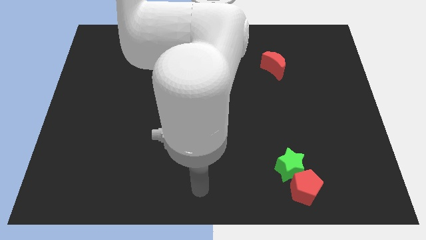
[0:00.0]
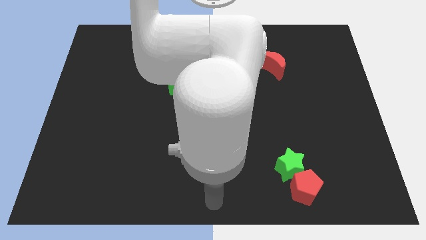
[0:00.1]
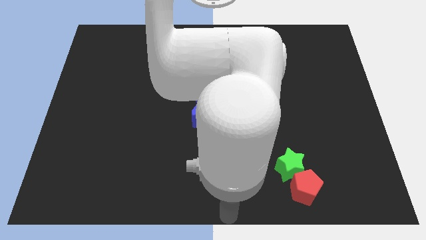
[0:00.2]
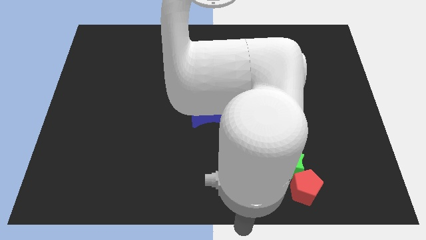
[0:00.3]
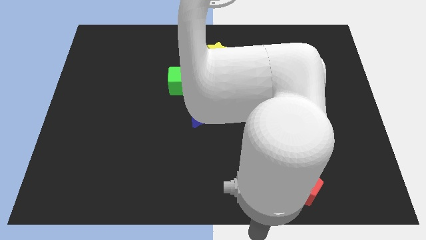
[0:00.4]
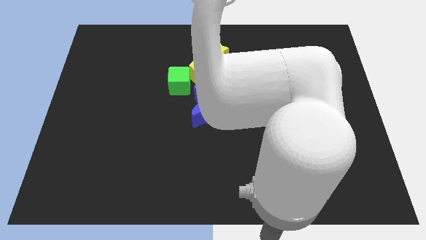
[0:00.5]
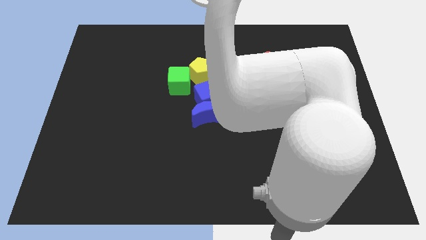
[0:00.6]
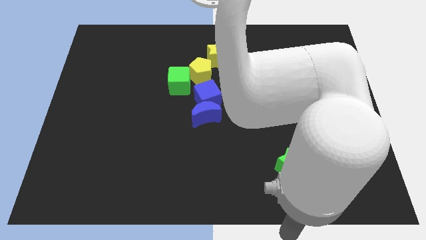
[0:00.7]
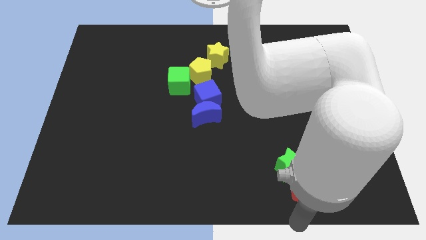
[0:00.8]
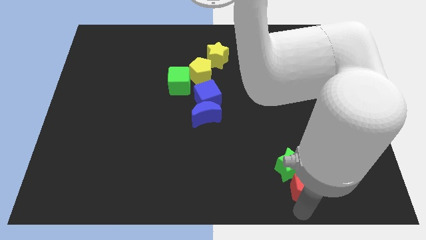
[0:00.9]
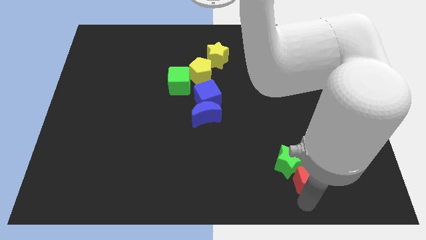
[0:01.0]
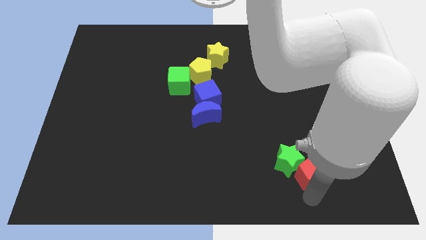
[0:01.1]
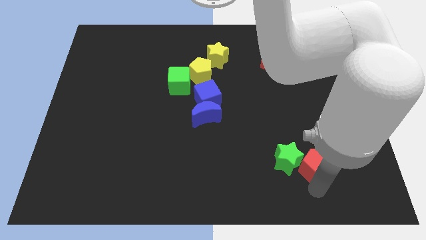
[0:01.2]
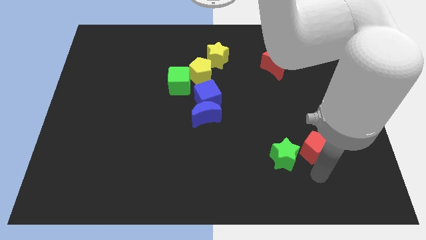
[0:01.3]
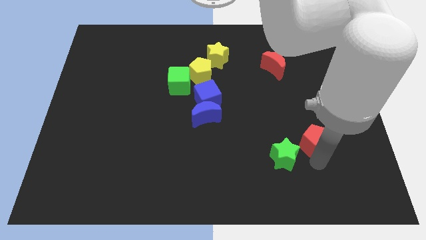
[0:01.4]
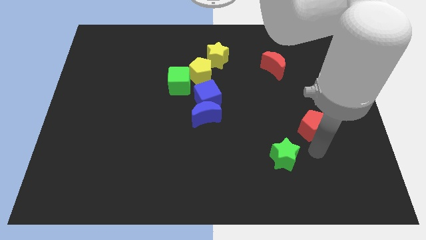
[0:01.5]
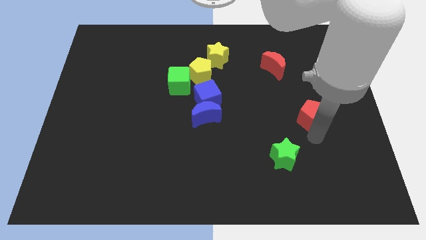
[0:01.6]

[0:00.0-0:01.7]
separate the red pentagon from the green star

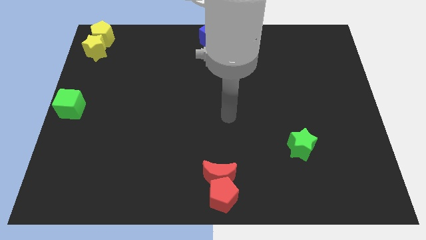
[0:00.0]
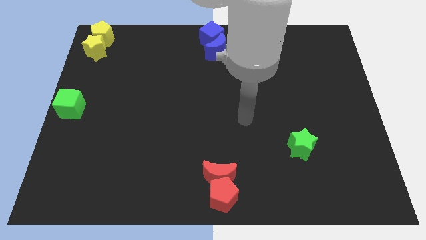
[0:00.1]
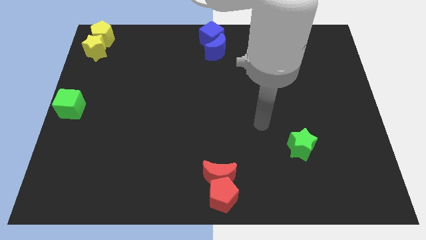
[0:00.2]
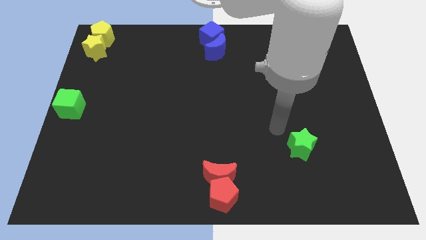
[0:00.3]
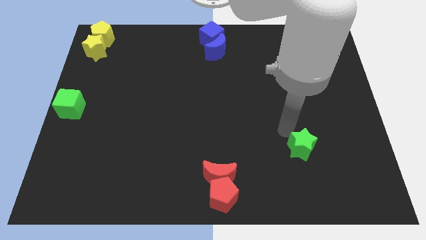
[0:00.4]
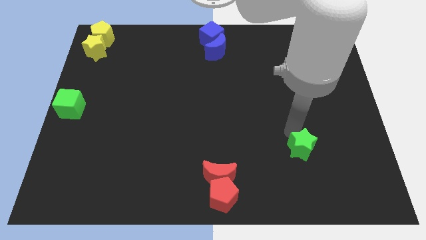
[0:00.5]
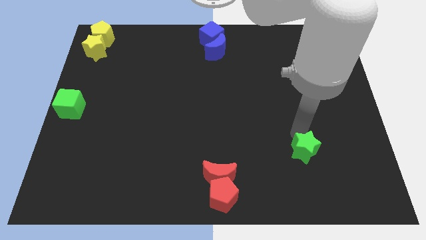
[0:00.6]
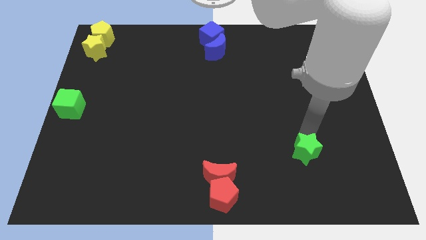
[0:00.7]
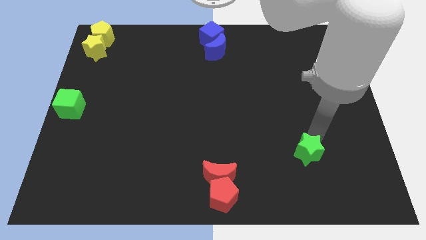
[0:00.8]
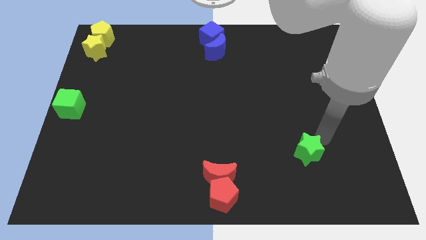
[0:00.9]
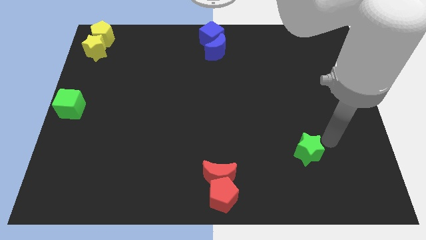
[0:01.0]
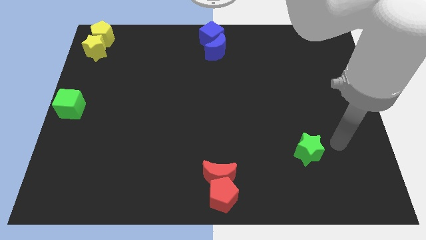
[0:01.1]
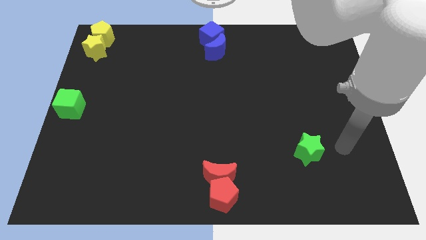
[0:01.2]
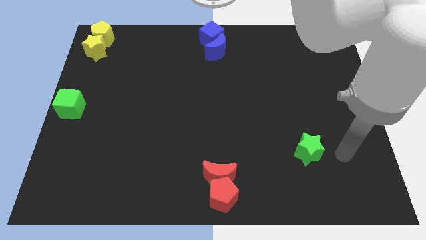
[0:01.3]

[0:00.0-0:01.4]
slightly push the green cube towards the right side of the board

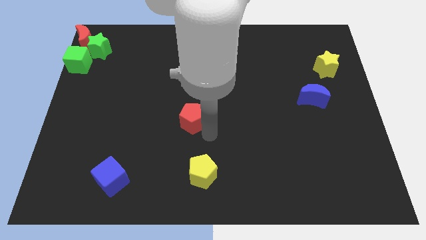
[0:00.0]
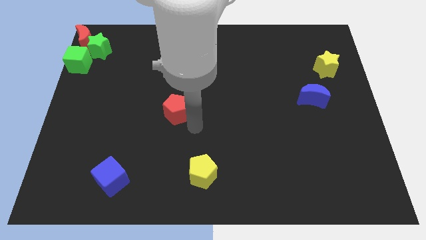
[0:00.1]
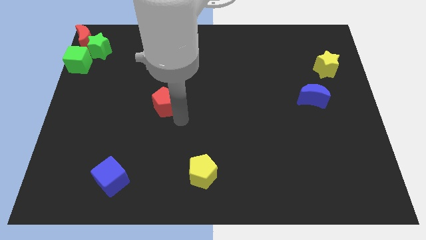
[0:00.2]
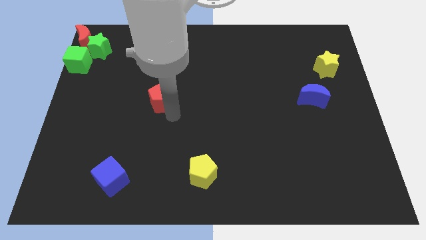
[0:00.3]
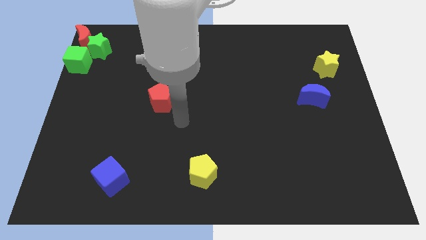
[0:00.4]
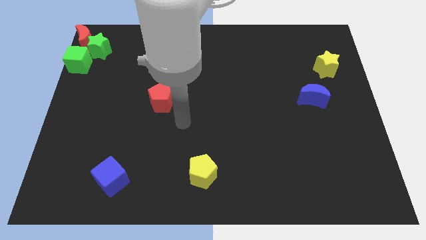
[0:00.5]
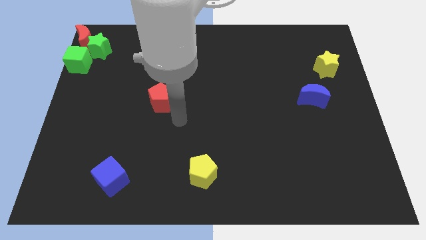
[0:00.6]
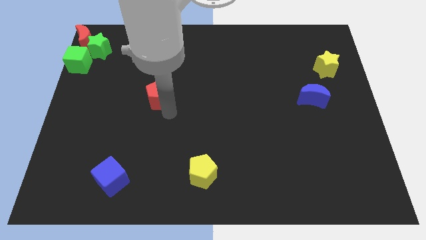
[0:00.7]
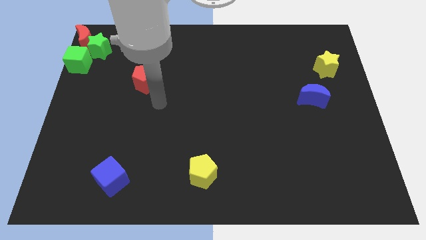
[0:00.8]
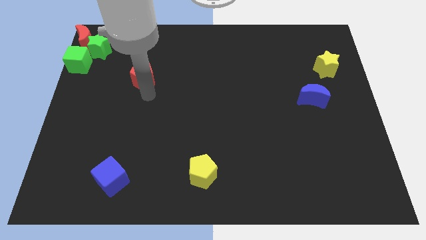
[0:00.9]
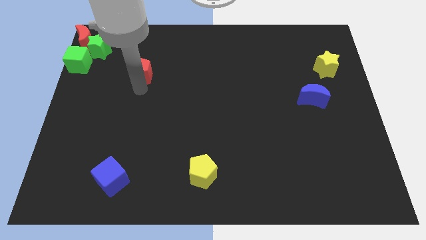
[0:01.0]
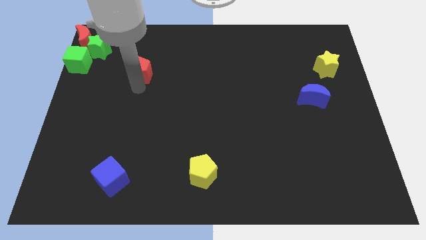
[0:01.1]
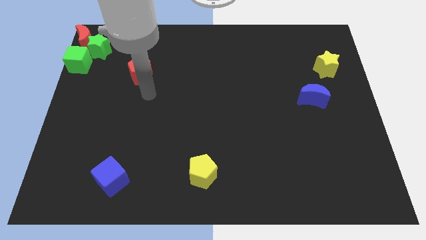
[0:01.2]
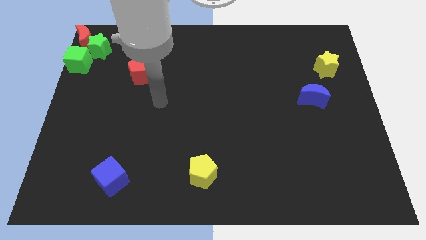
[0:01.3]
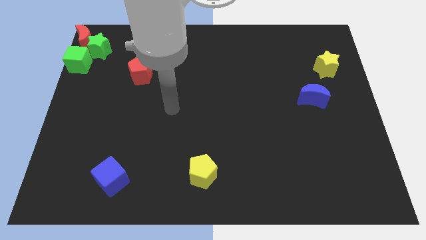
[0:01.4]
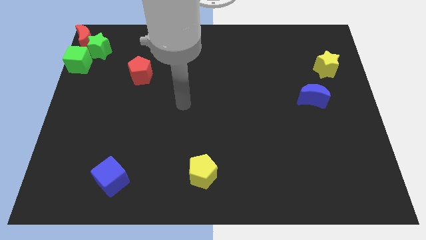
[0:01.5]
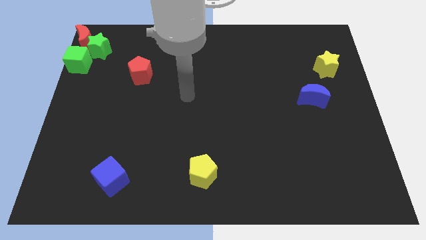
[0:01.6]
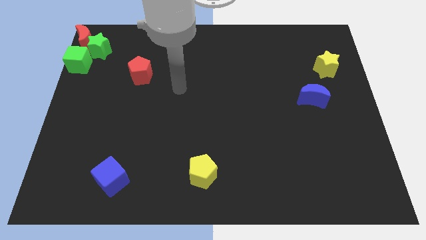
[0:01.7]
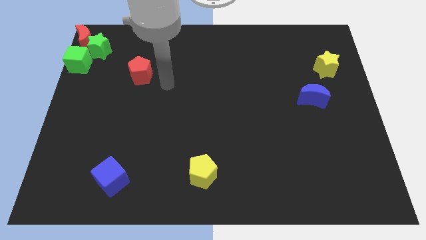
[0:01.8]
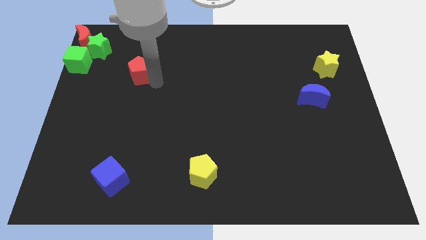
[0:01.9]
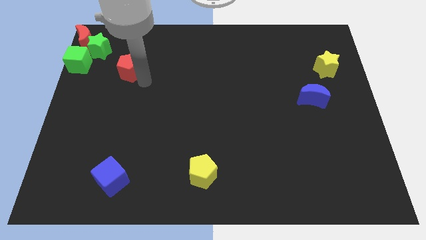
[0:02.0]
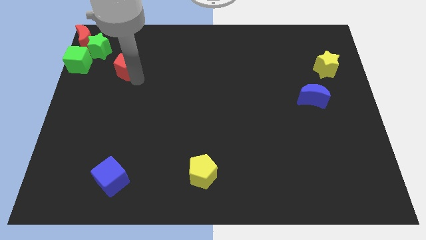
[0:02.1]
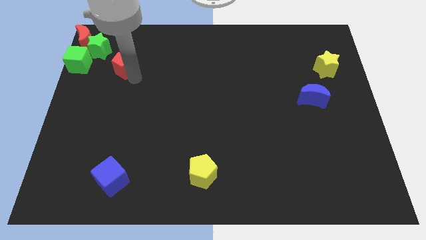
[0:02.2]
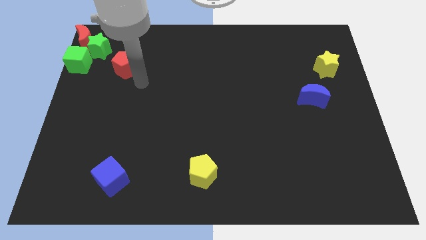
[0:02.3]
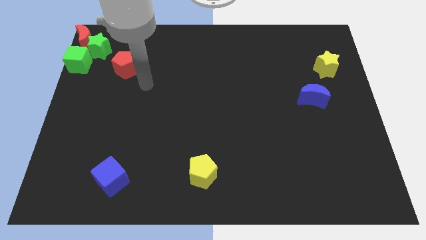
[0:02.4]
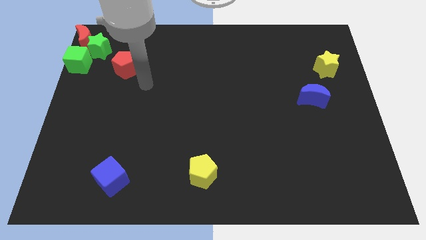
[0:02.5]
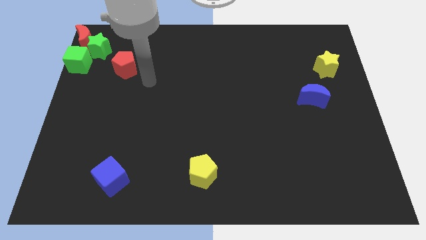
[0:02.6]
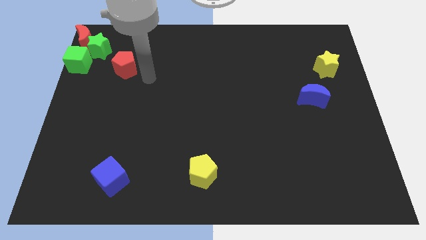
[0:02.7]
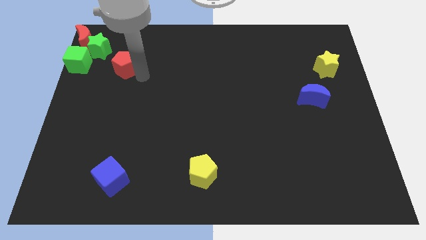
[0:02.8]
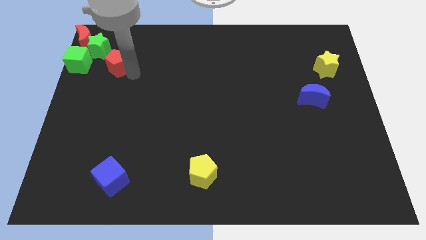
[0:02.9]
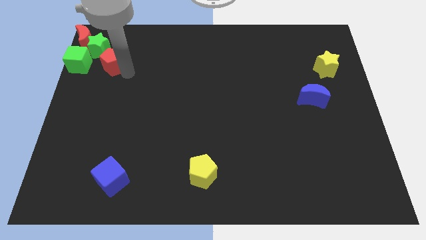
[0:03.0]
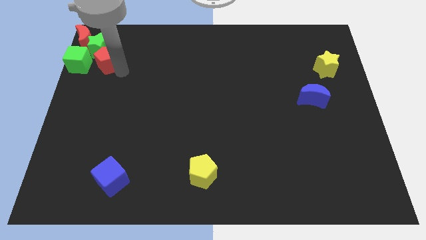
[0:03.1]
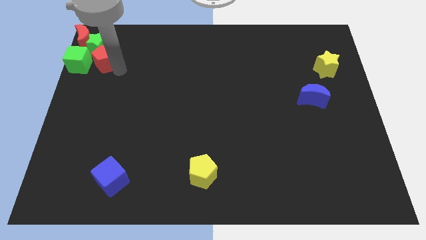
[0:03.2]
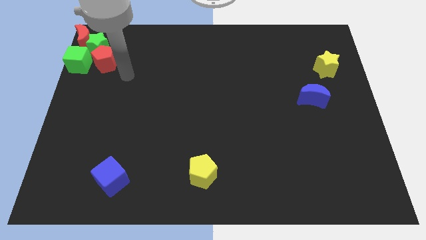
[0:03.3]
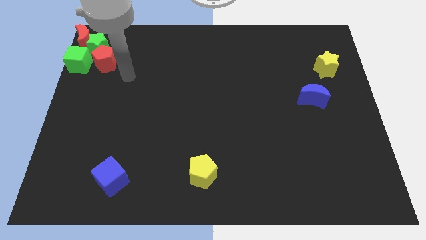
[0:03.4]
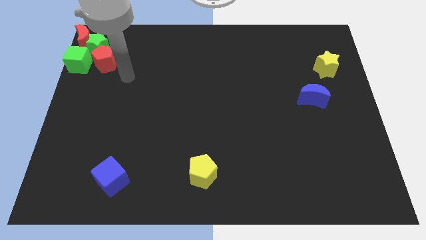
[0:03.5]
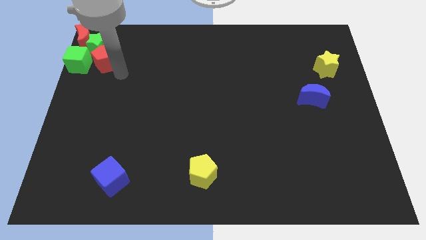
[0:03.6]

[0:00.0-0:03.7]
push the red pentagon to the bottom right of the green star

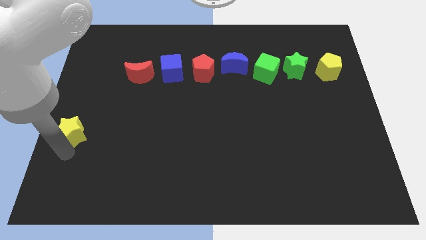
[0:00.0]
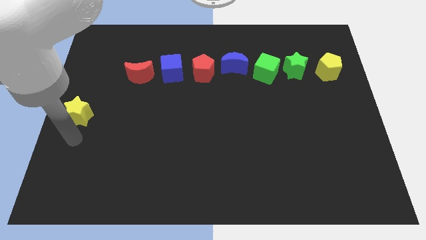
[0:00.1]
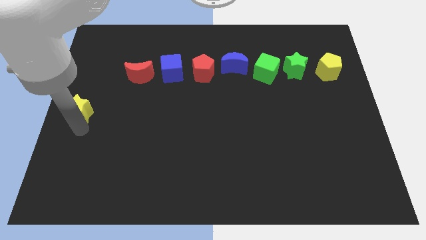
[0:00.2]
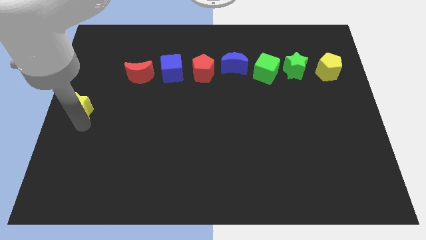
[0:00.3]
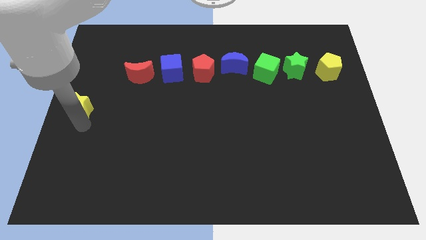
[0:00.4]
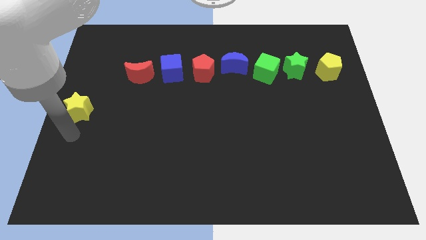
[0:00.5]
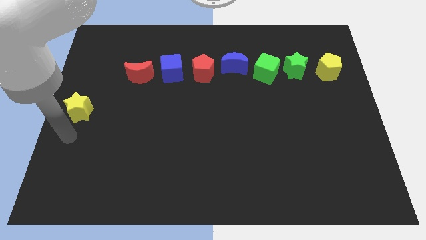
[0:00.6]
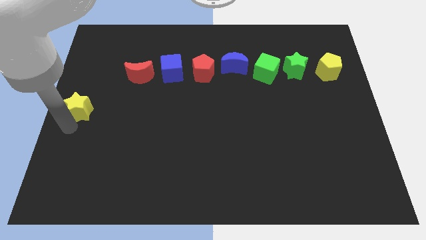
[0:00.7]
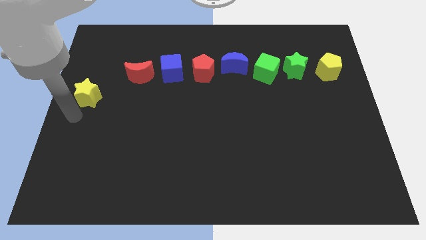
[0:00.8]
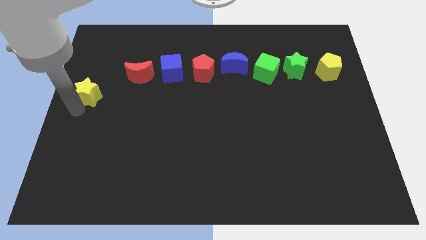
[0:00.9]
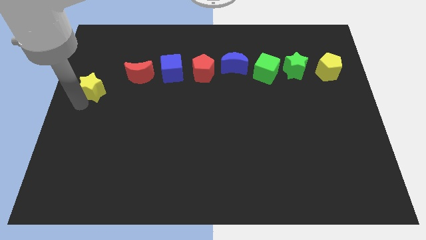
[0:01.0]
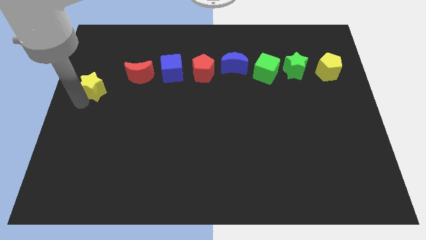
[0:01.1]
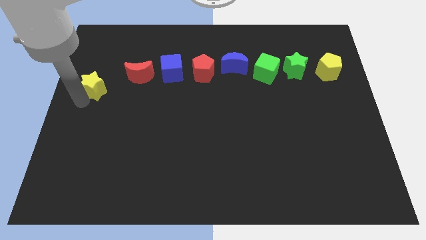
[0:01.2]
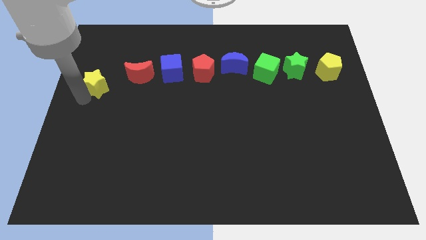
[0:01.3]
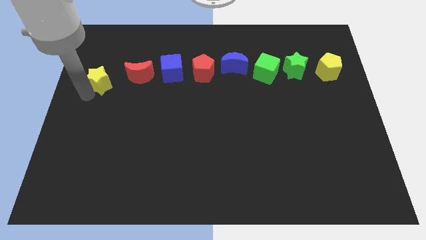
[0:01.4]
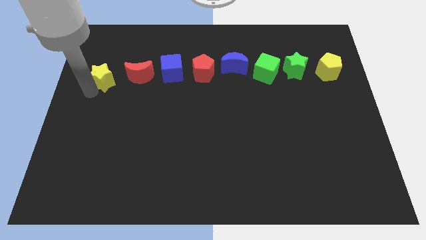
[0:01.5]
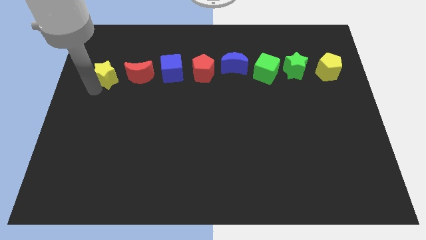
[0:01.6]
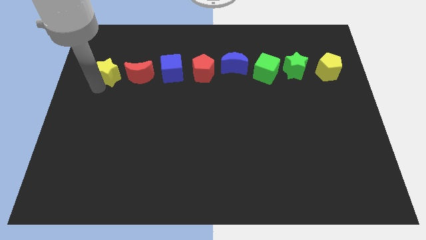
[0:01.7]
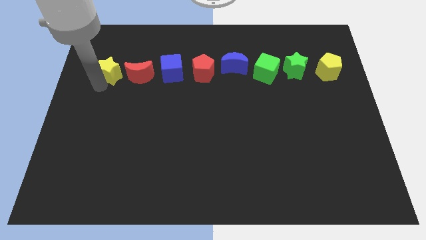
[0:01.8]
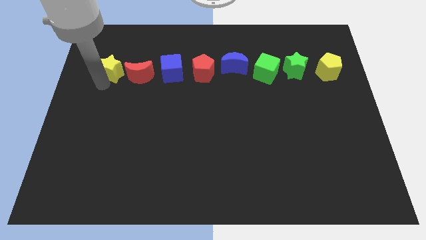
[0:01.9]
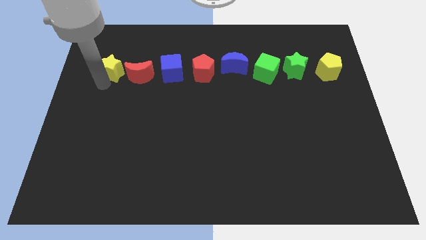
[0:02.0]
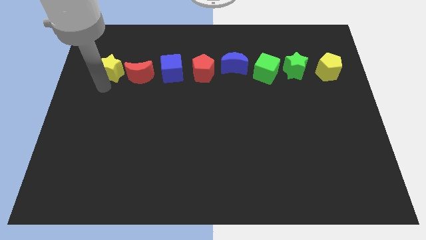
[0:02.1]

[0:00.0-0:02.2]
push the yellow star left to the red crescent
